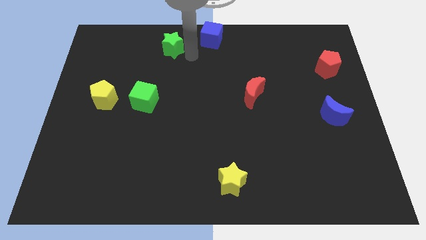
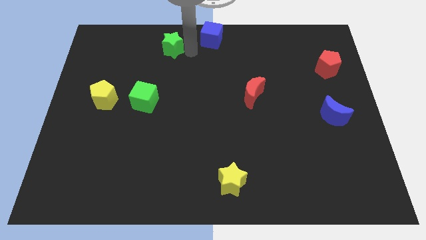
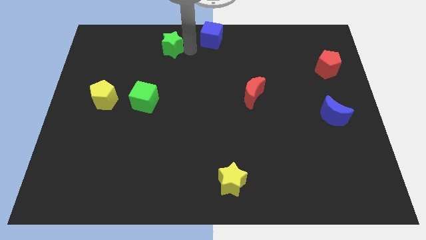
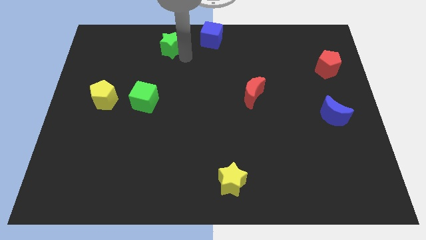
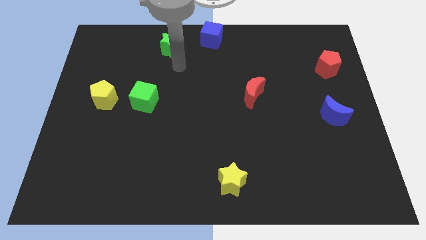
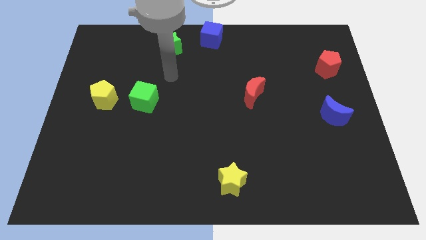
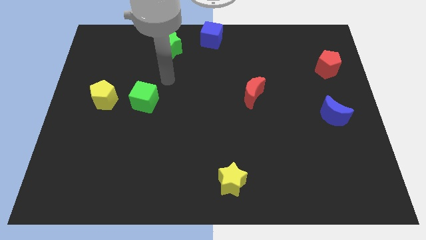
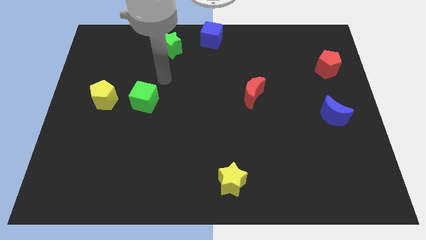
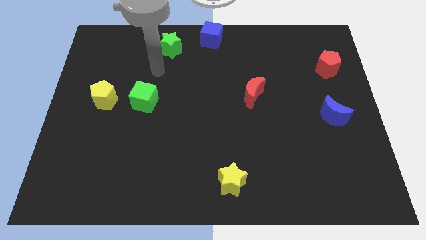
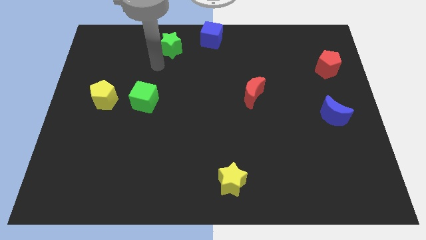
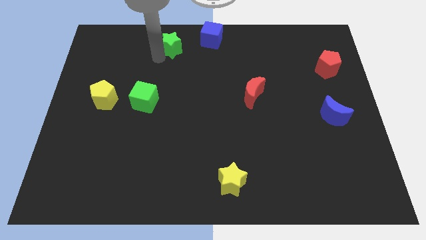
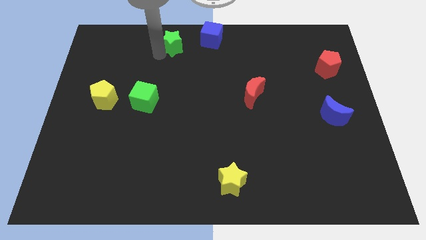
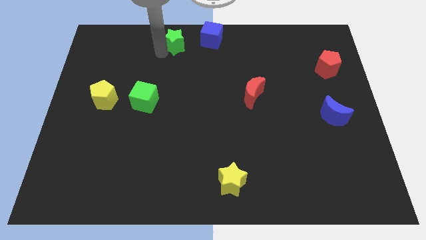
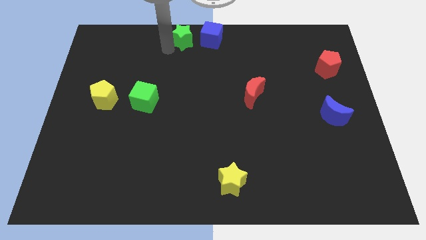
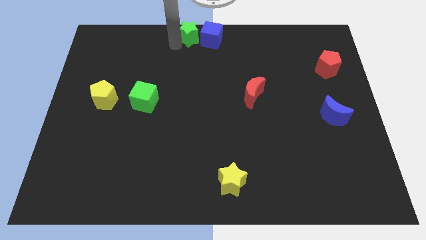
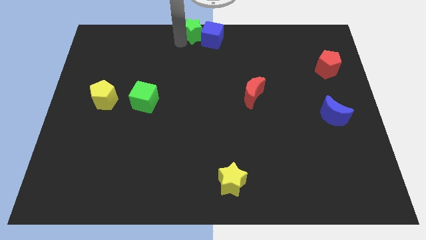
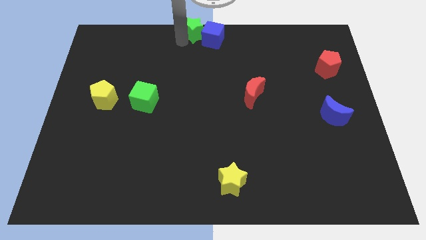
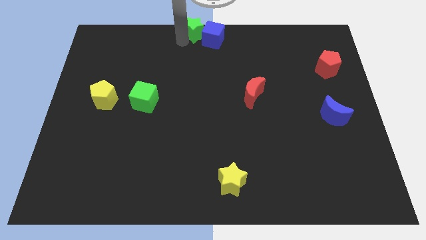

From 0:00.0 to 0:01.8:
put the green star parallel left to the blue cube

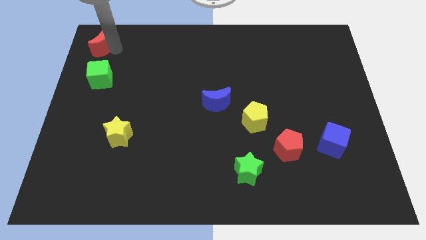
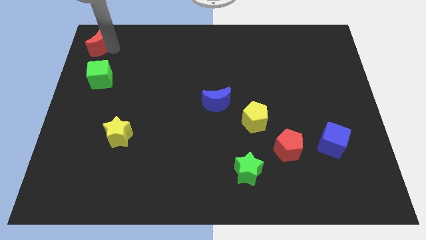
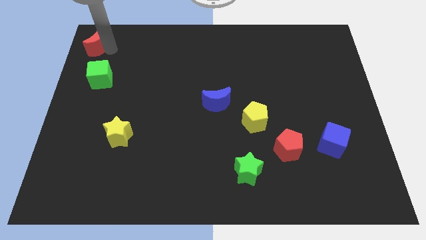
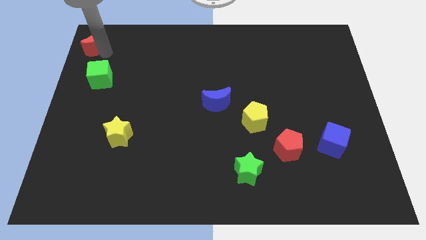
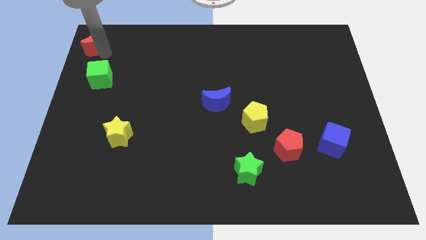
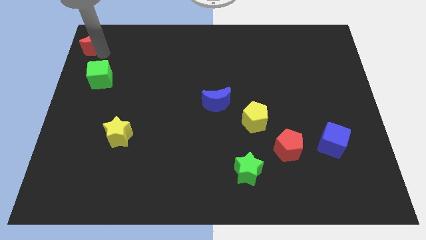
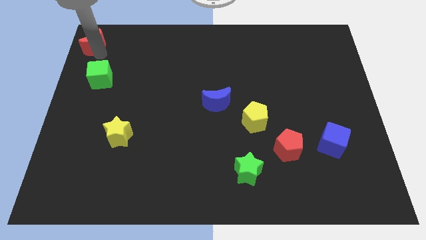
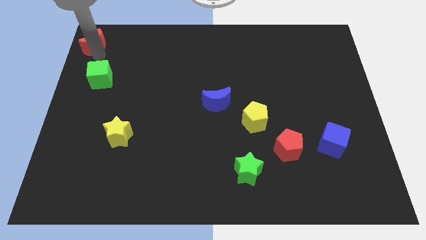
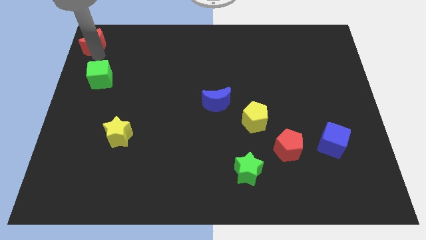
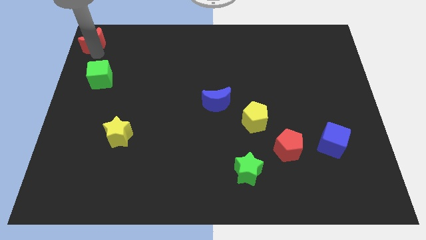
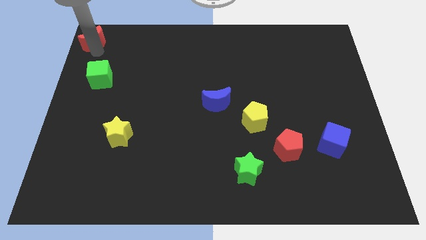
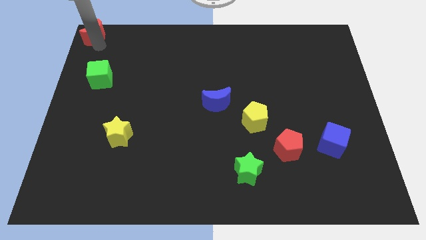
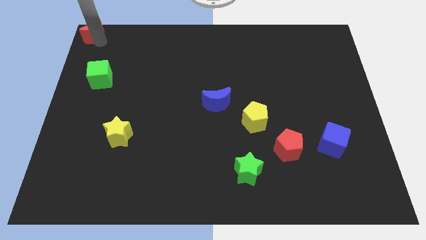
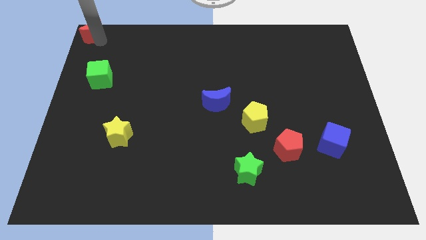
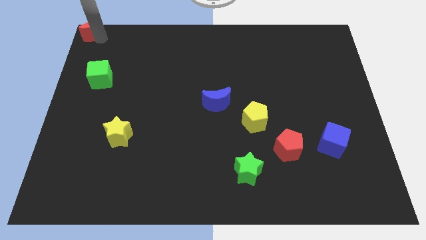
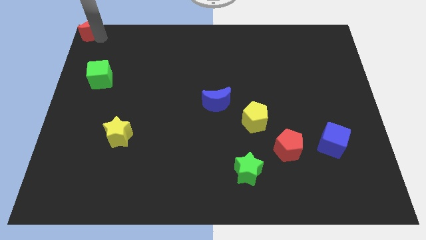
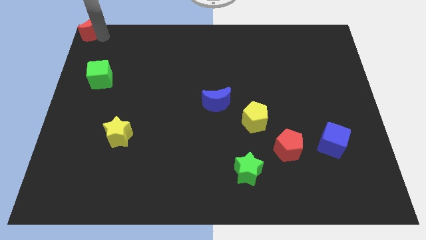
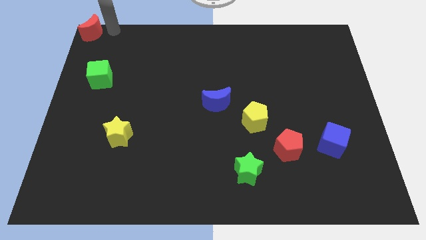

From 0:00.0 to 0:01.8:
place the red crescent at the top left corner of the board

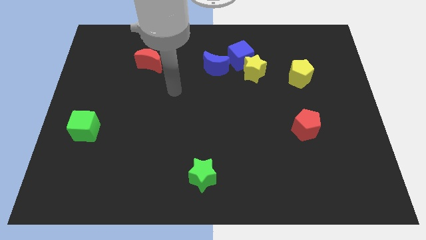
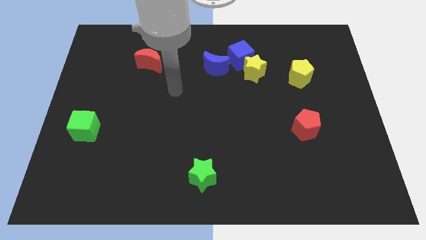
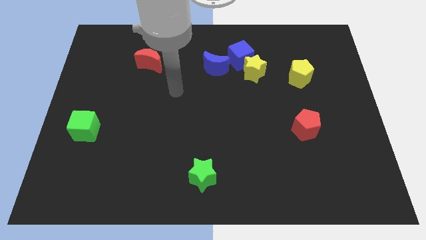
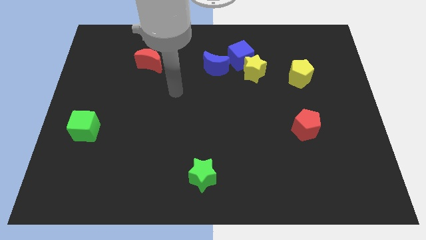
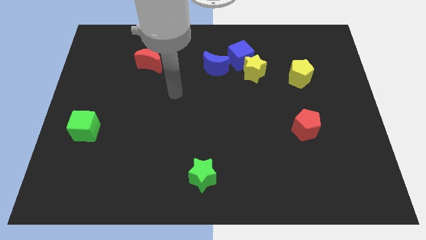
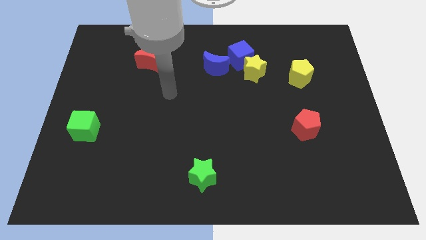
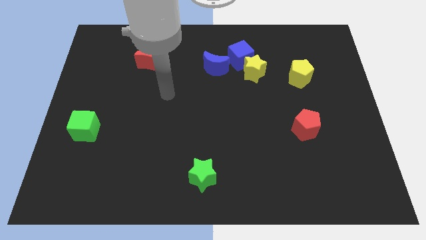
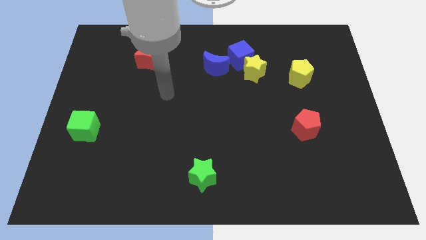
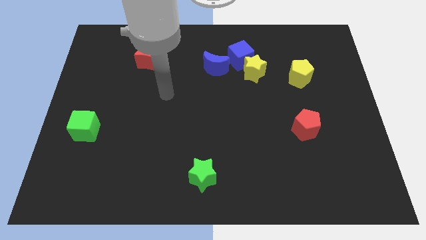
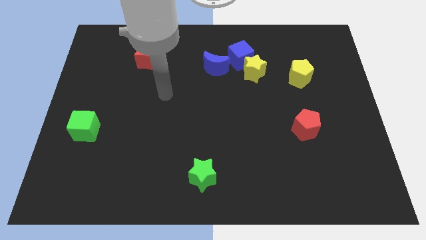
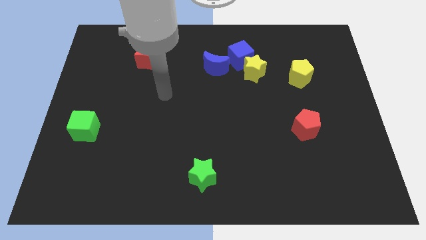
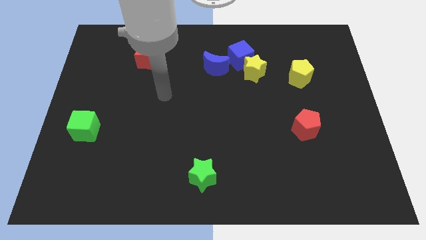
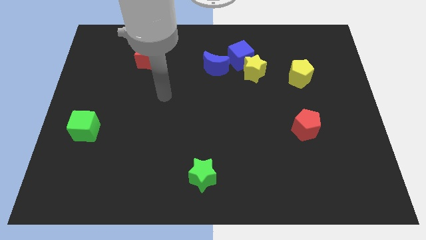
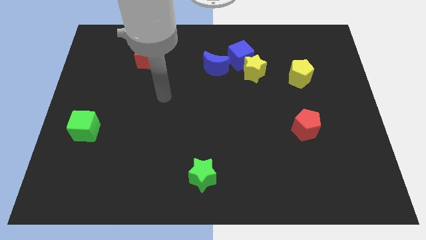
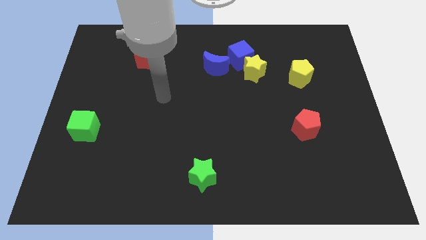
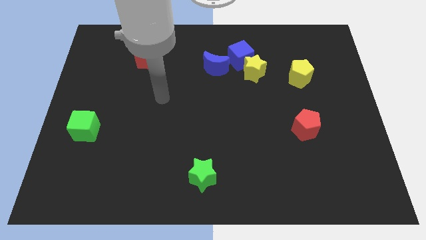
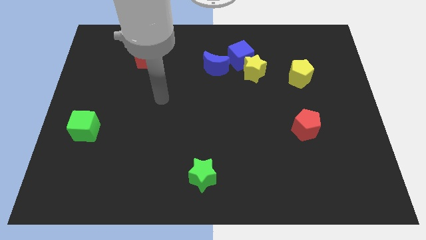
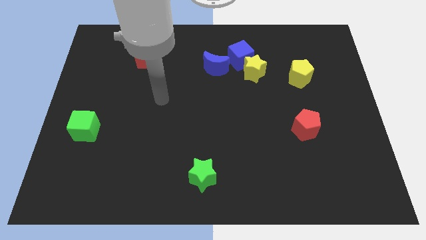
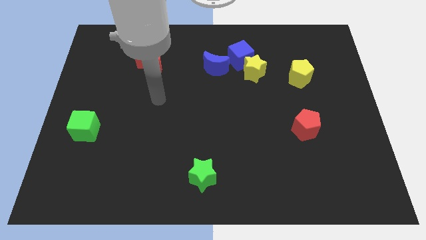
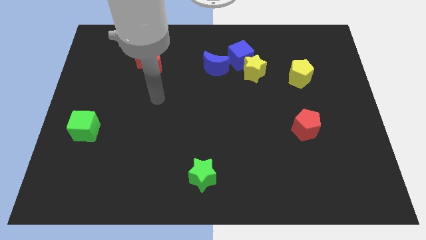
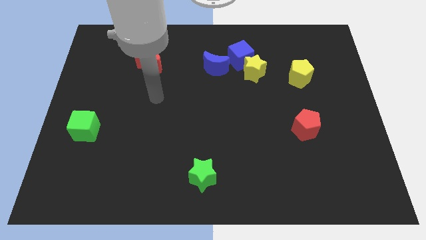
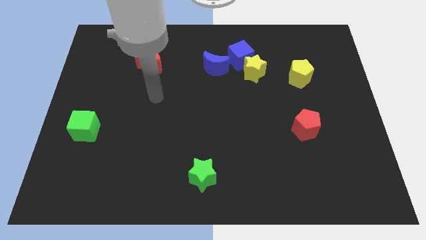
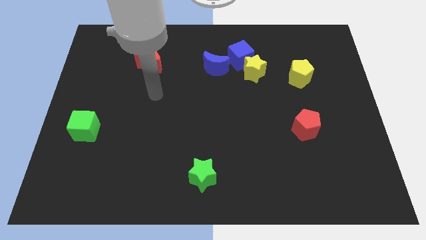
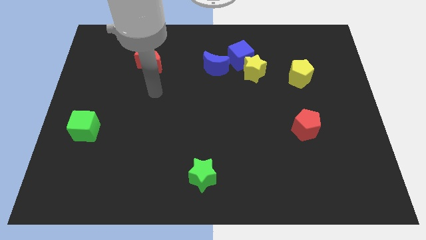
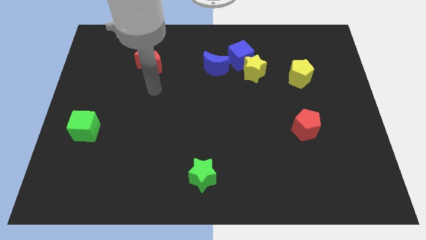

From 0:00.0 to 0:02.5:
move your arm to the center left

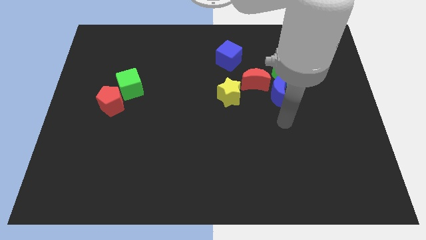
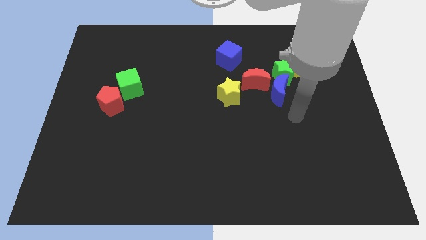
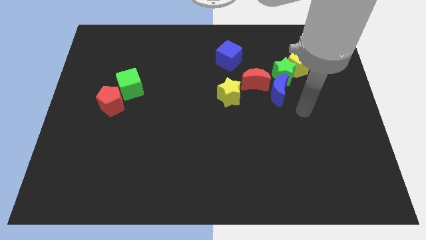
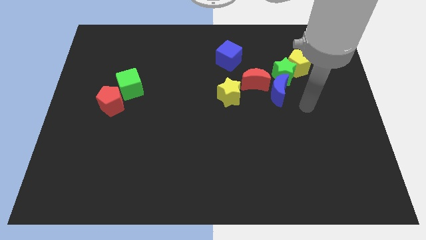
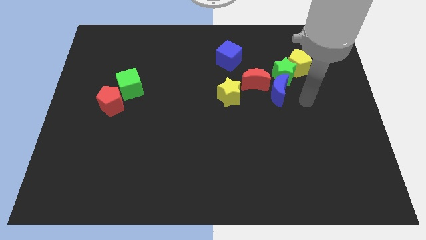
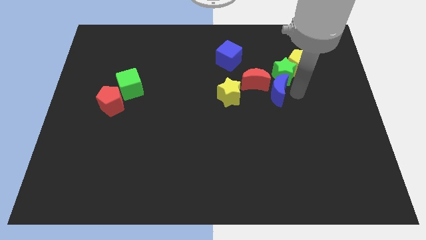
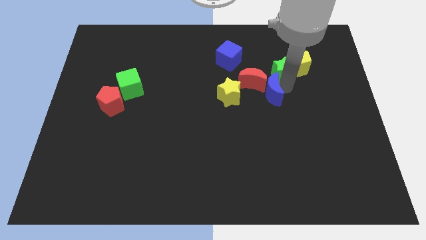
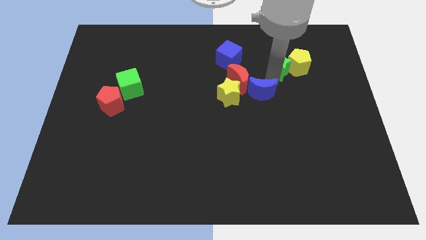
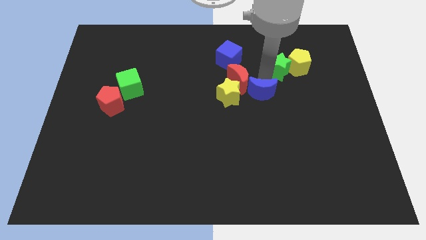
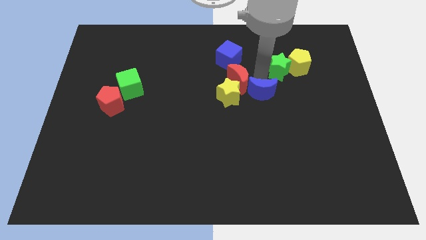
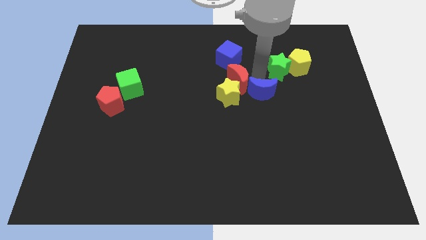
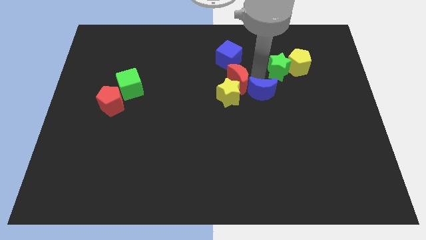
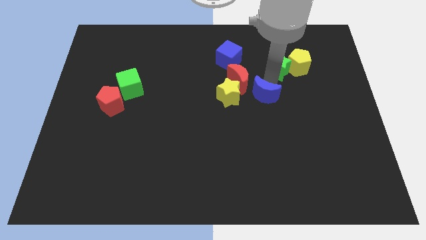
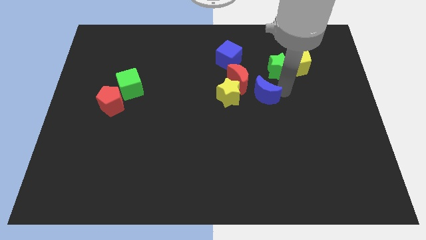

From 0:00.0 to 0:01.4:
move the blue moon into the red moon

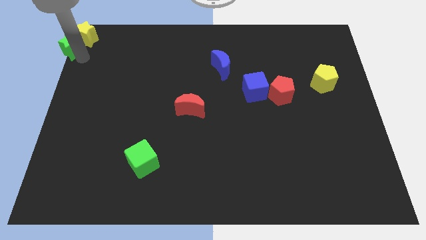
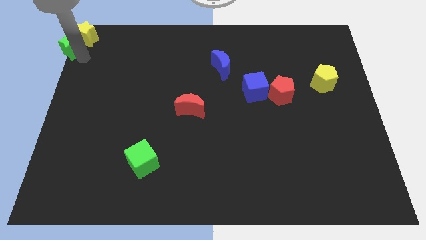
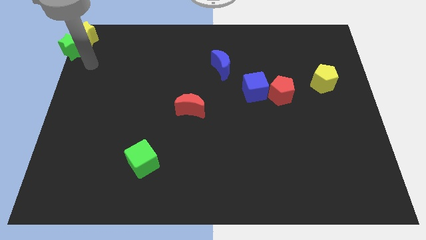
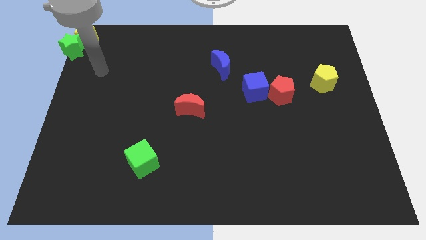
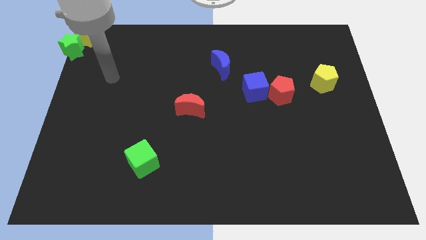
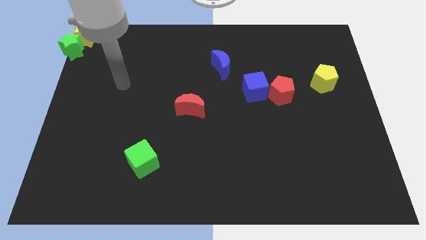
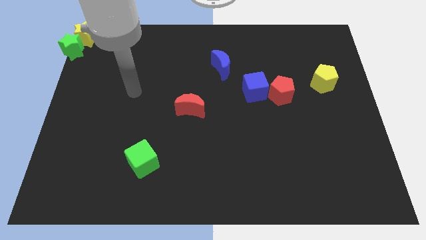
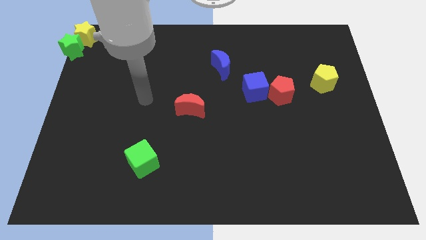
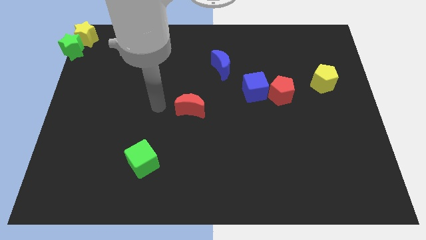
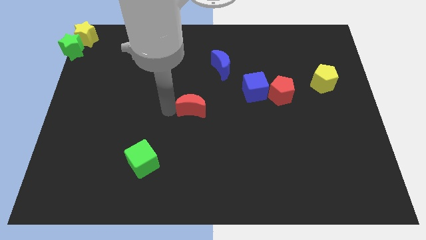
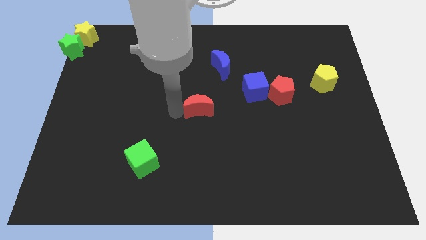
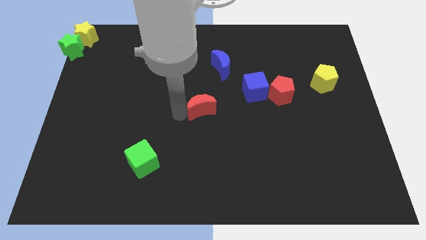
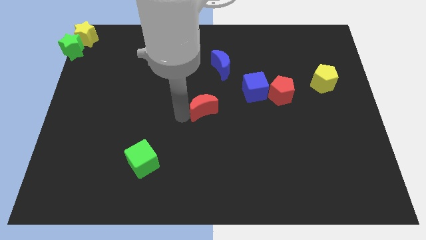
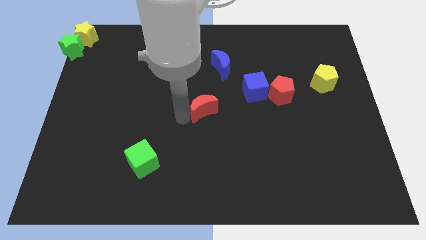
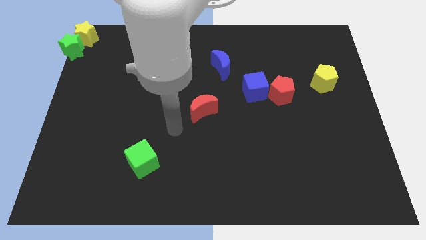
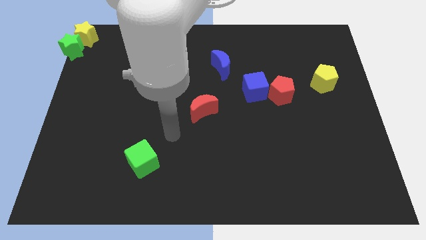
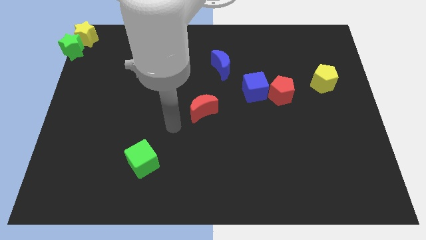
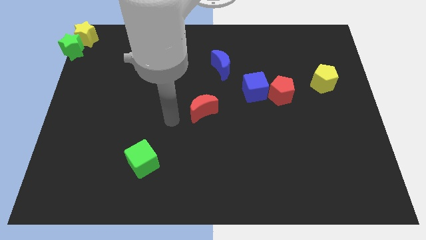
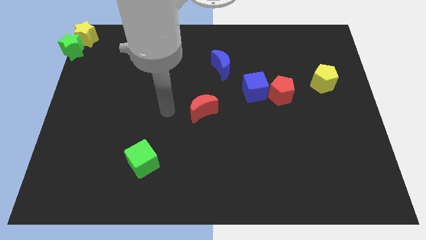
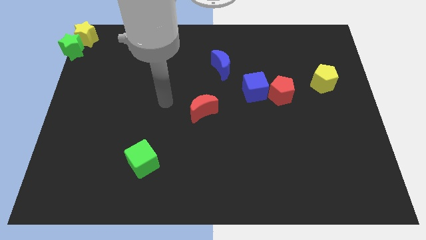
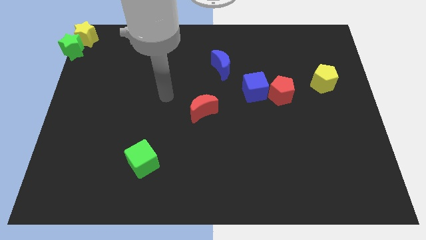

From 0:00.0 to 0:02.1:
slightly move the red moon towards the right side
